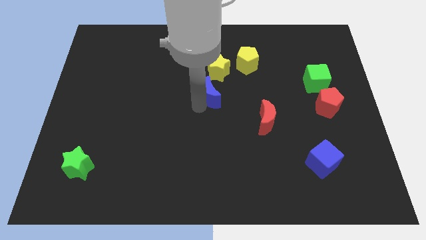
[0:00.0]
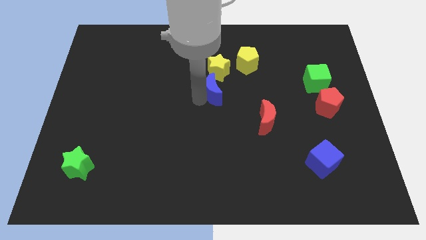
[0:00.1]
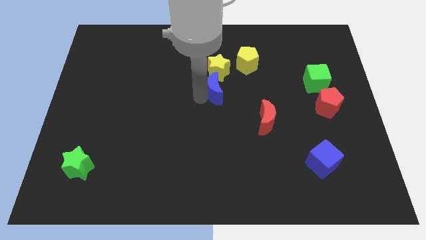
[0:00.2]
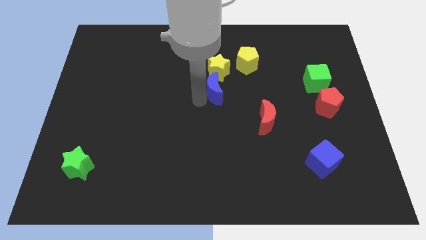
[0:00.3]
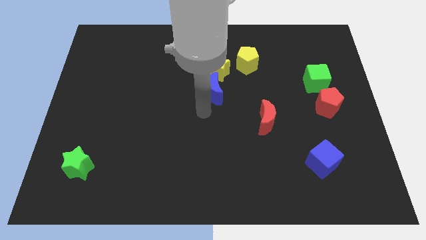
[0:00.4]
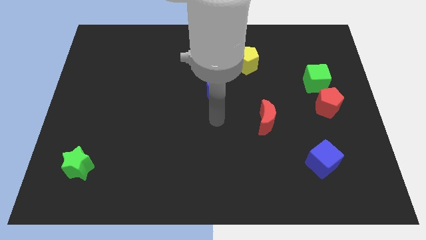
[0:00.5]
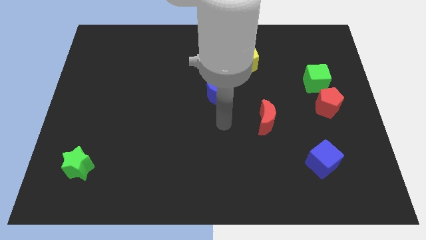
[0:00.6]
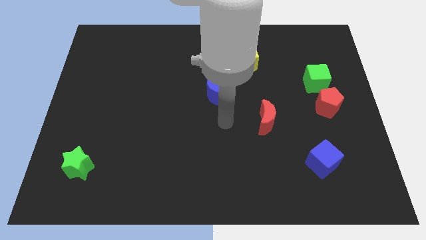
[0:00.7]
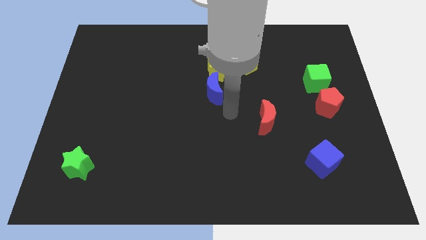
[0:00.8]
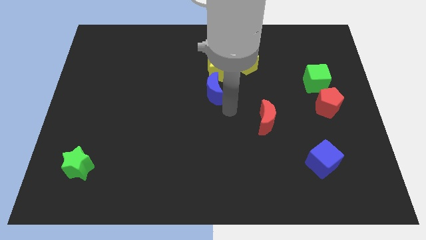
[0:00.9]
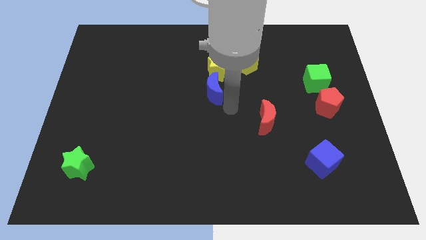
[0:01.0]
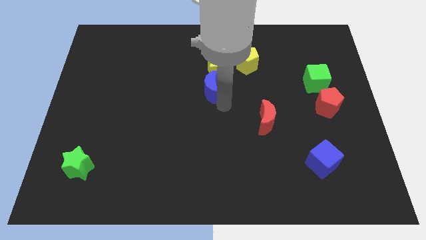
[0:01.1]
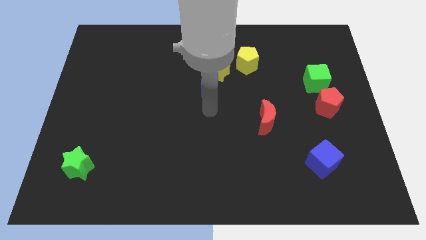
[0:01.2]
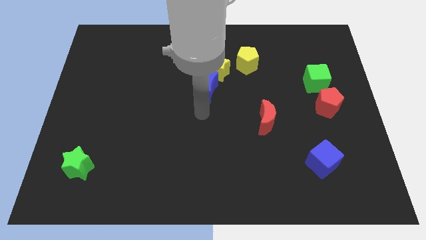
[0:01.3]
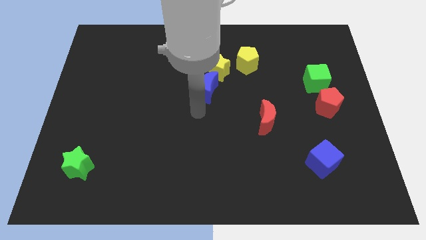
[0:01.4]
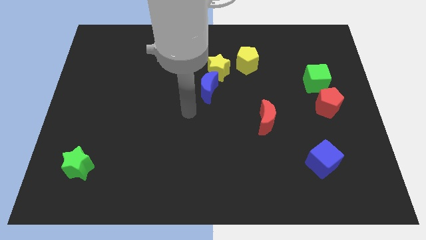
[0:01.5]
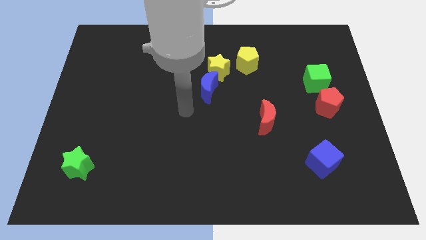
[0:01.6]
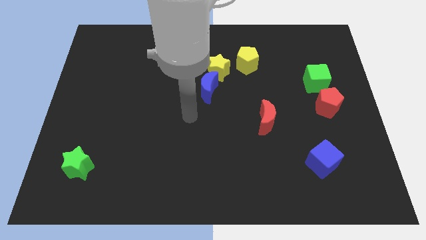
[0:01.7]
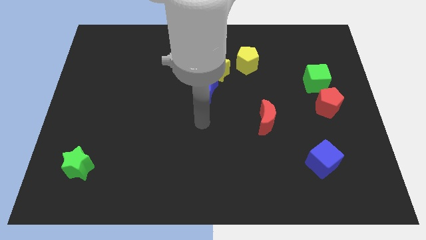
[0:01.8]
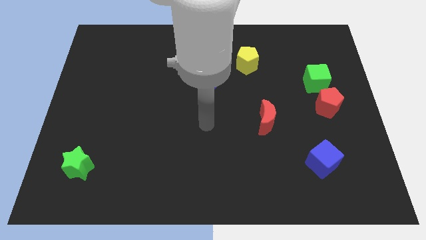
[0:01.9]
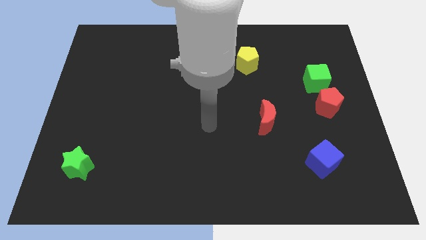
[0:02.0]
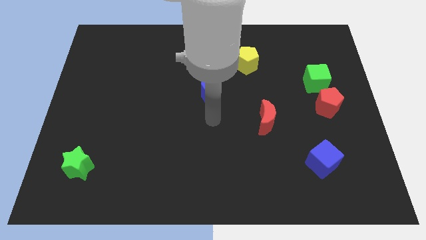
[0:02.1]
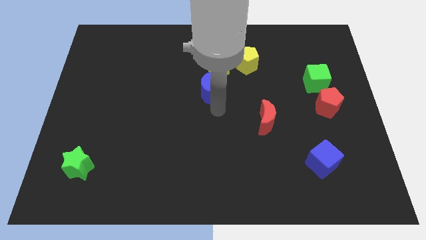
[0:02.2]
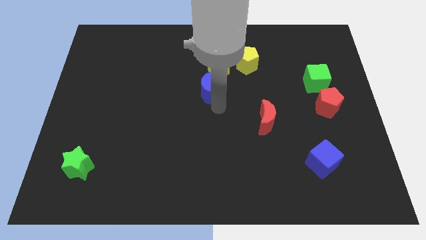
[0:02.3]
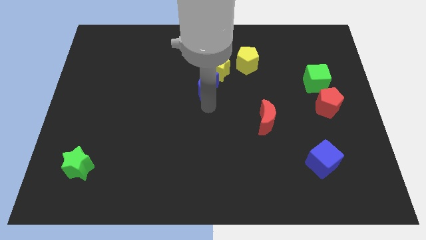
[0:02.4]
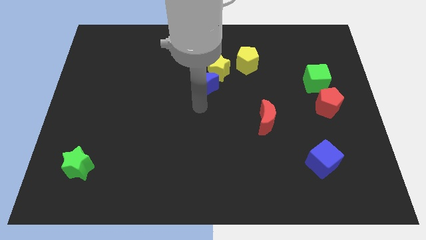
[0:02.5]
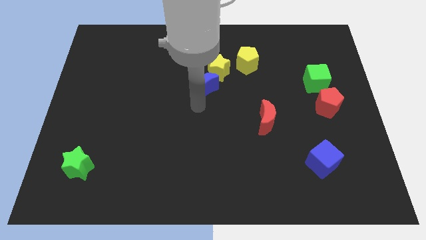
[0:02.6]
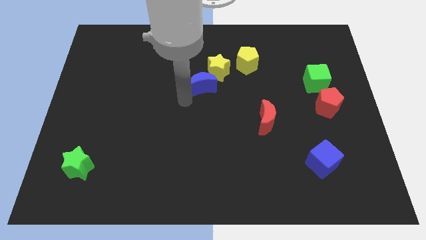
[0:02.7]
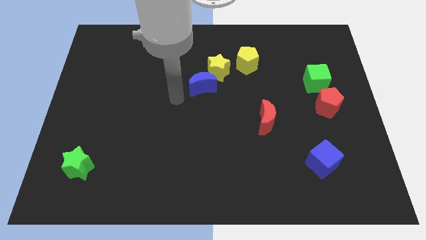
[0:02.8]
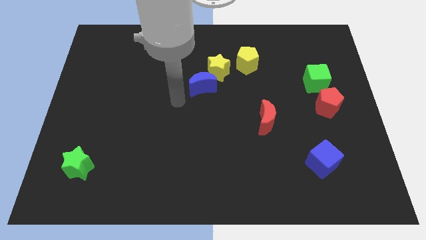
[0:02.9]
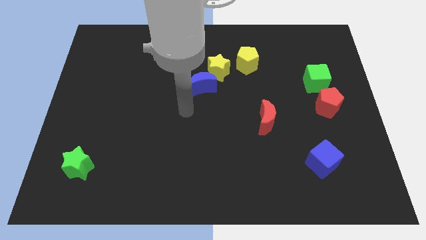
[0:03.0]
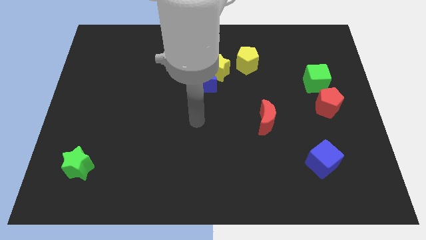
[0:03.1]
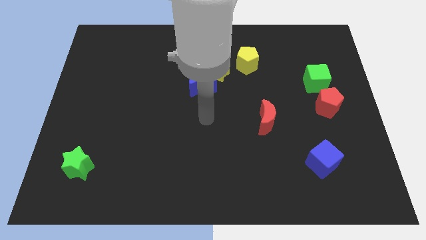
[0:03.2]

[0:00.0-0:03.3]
push the blue moon close to the yellow star

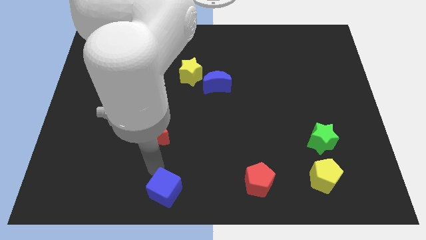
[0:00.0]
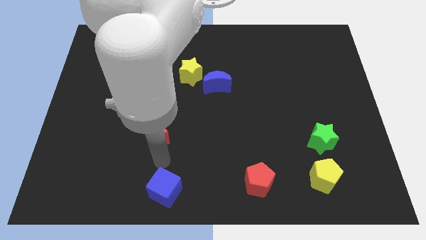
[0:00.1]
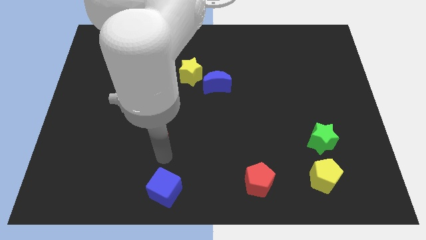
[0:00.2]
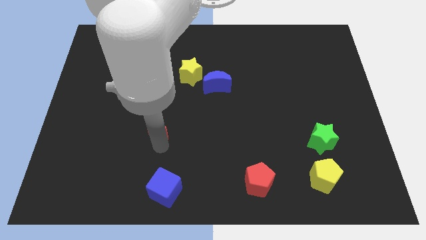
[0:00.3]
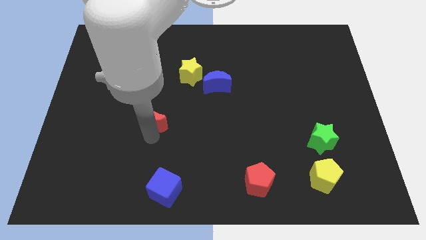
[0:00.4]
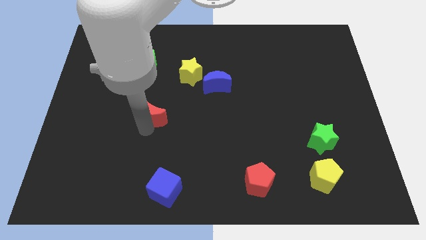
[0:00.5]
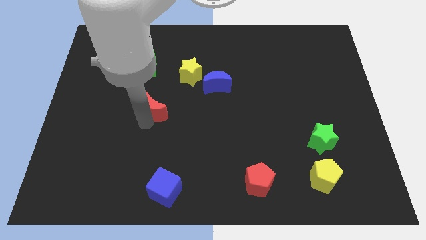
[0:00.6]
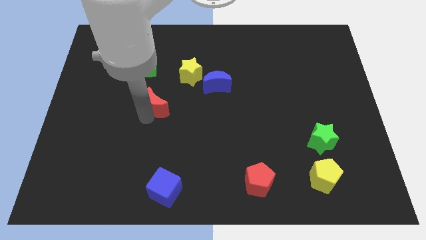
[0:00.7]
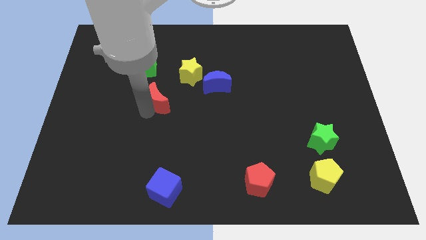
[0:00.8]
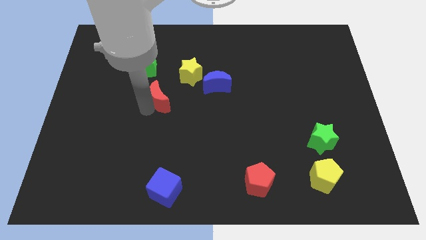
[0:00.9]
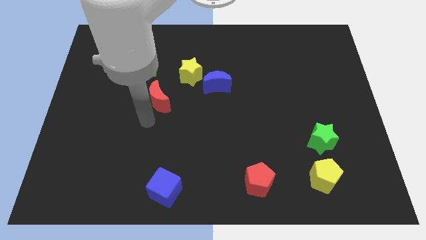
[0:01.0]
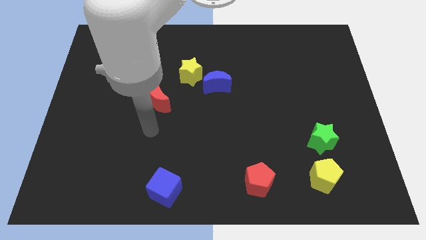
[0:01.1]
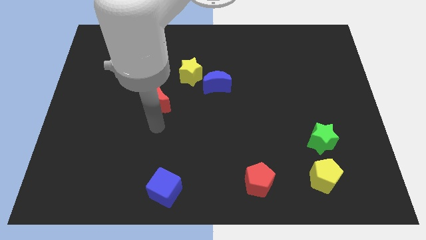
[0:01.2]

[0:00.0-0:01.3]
move the red moon slightly towards the top

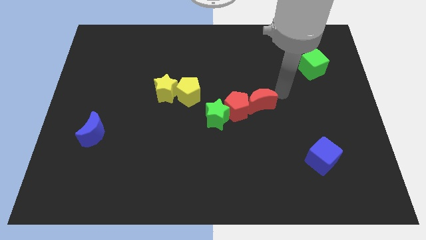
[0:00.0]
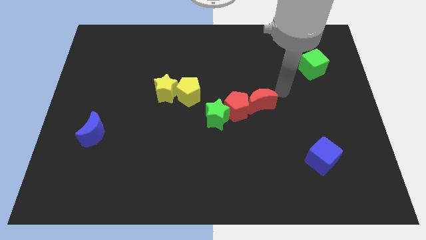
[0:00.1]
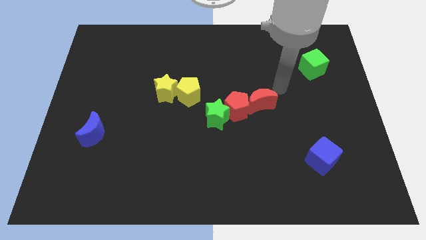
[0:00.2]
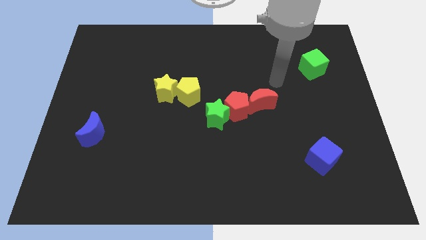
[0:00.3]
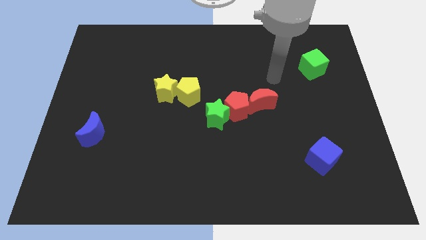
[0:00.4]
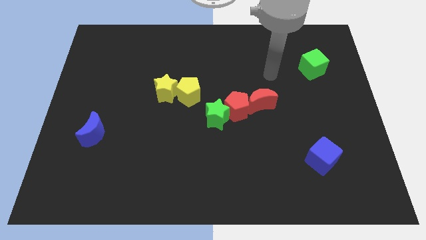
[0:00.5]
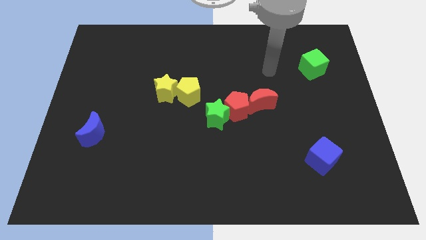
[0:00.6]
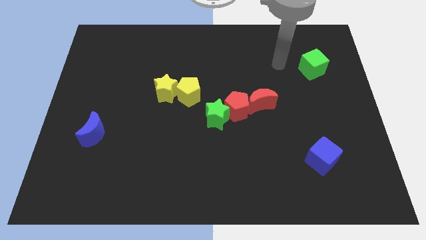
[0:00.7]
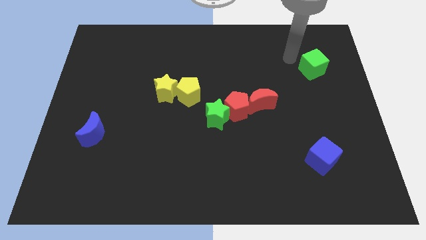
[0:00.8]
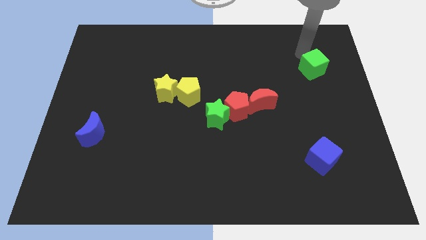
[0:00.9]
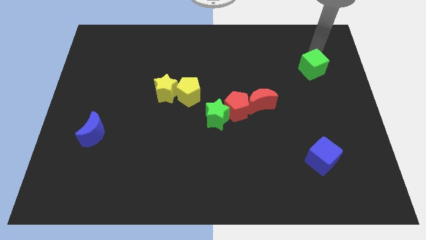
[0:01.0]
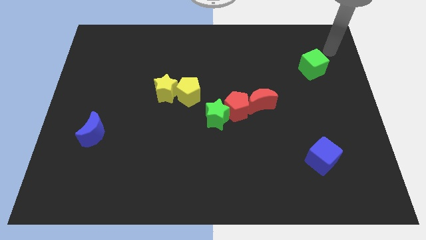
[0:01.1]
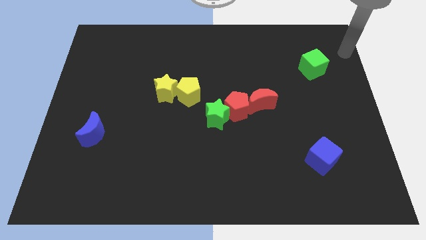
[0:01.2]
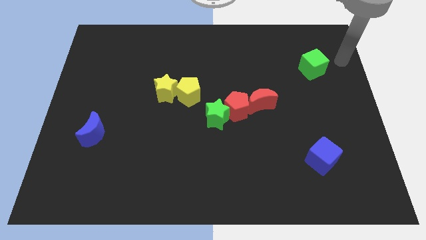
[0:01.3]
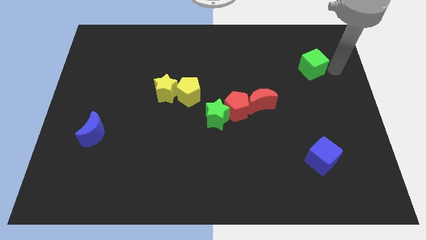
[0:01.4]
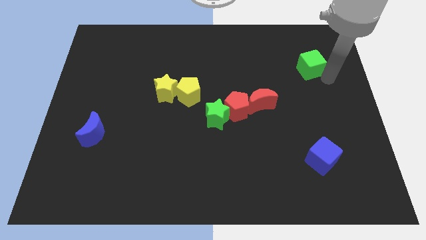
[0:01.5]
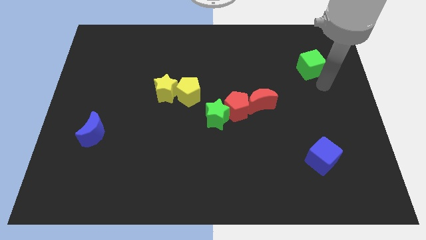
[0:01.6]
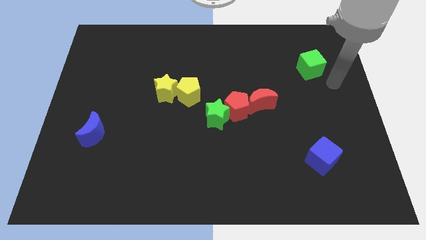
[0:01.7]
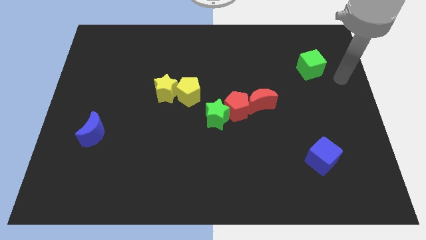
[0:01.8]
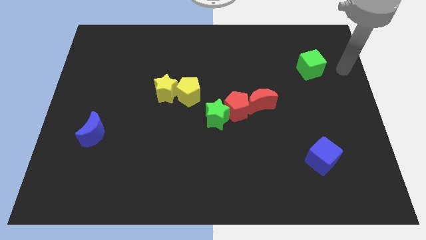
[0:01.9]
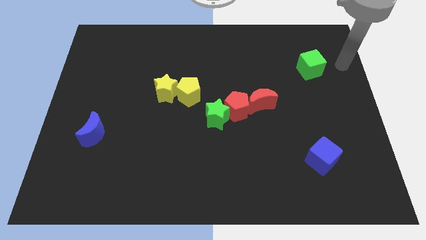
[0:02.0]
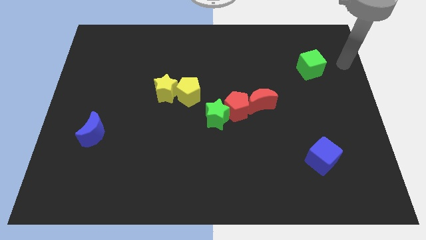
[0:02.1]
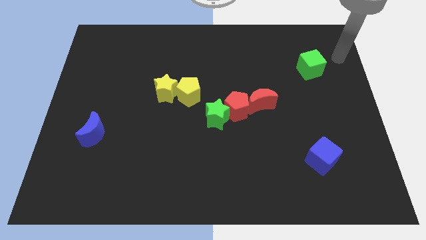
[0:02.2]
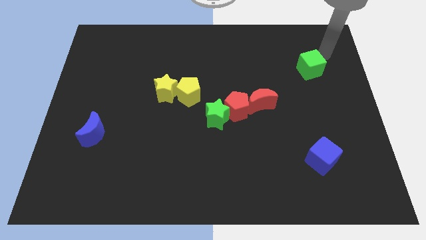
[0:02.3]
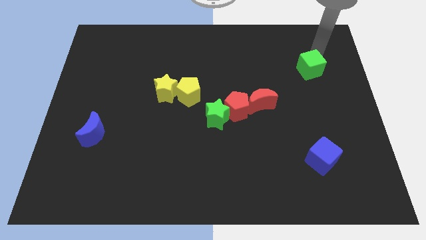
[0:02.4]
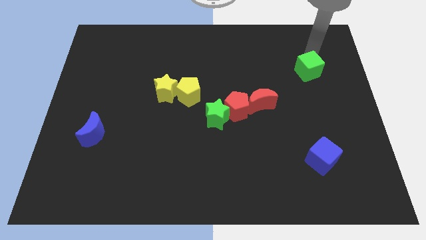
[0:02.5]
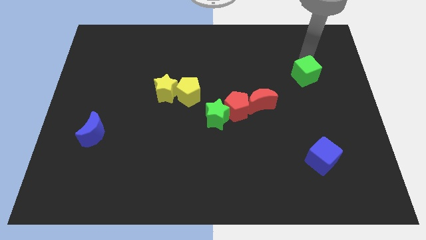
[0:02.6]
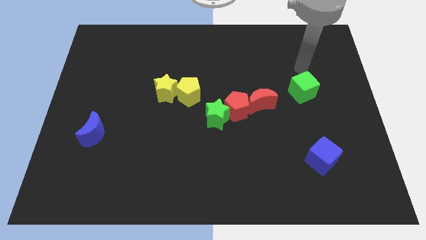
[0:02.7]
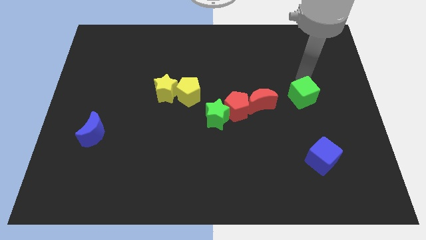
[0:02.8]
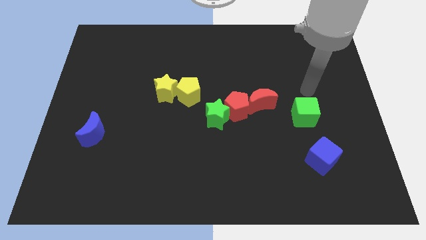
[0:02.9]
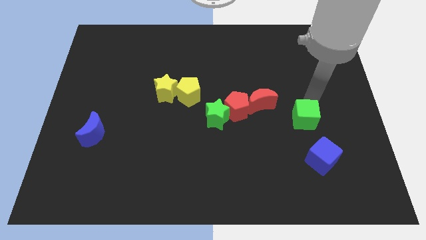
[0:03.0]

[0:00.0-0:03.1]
place the green cube horizontally to the right side of the green star

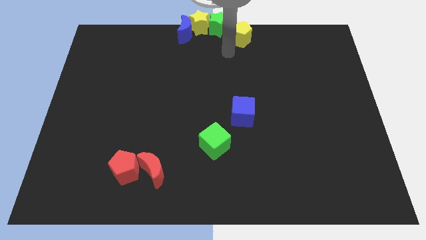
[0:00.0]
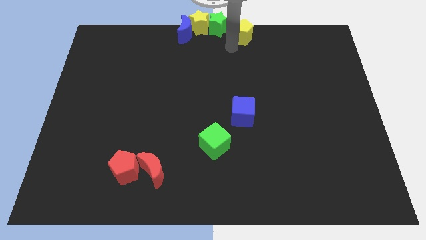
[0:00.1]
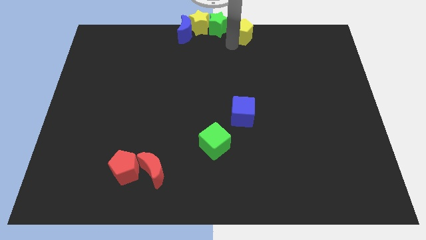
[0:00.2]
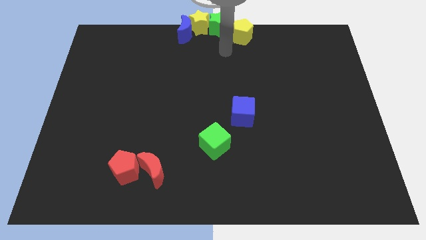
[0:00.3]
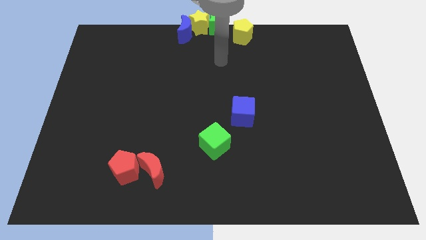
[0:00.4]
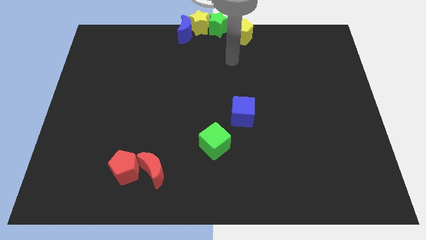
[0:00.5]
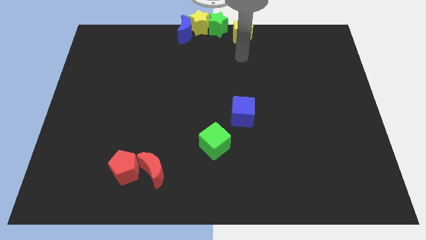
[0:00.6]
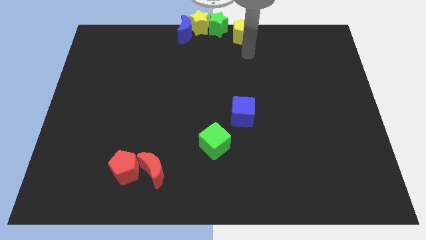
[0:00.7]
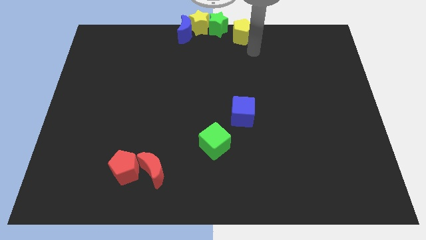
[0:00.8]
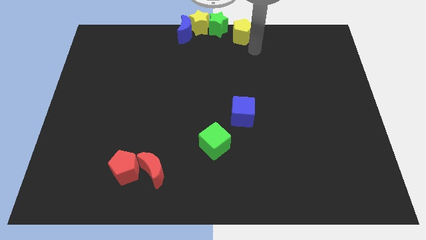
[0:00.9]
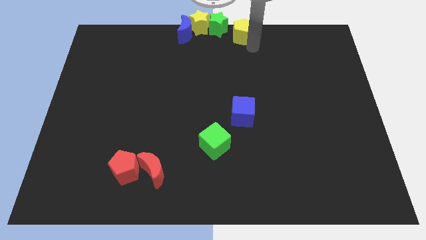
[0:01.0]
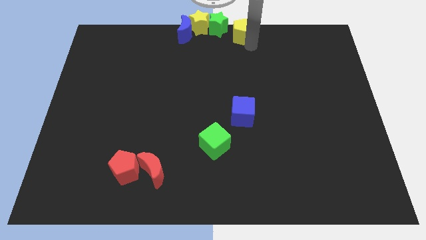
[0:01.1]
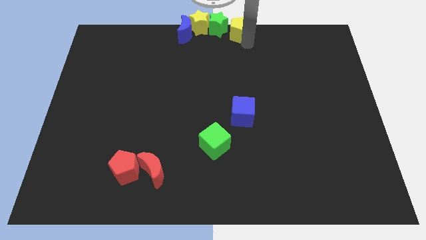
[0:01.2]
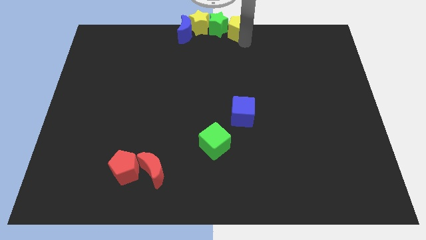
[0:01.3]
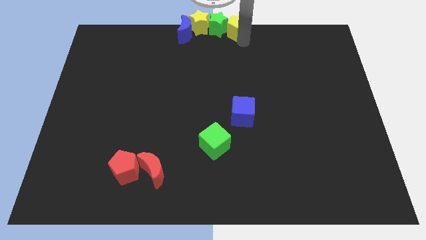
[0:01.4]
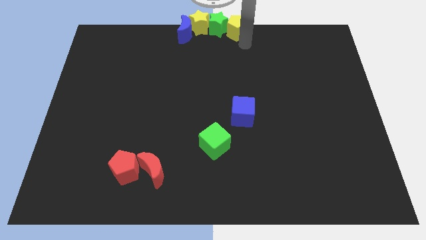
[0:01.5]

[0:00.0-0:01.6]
move the yellow pentagon towards the right side of the green star
